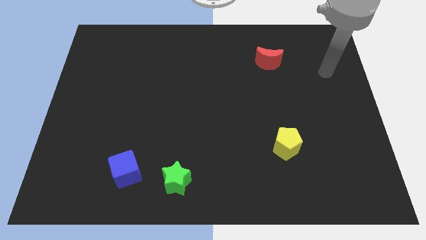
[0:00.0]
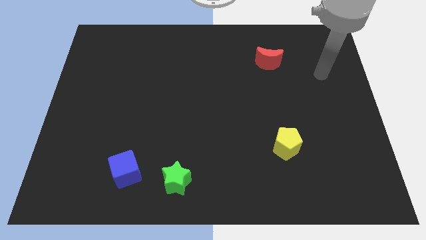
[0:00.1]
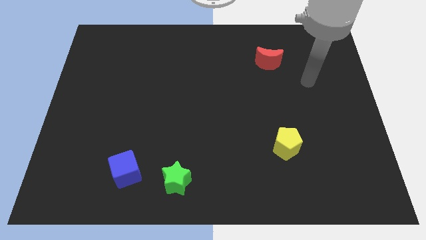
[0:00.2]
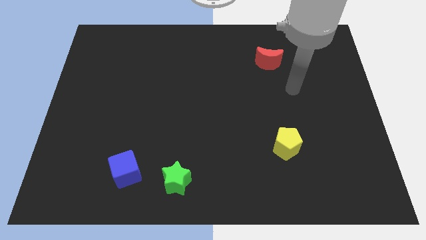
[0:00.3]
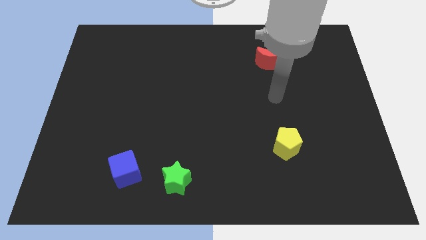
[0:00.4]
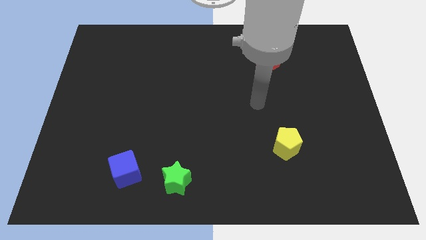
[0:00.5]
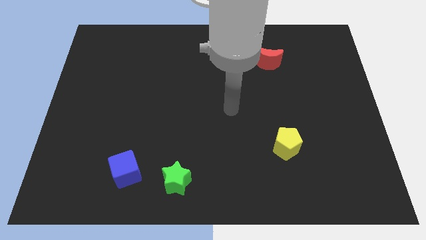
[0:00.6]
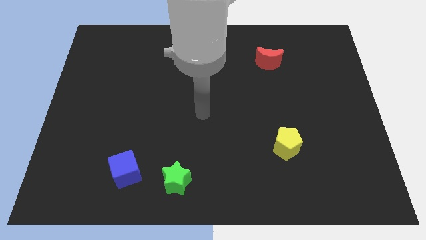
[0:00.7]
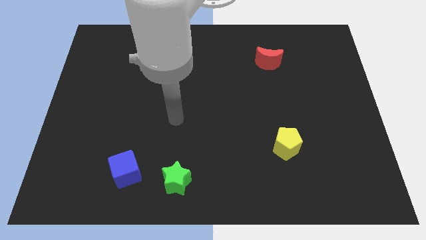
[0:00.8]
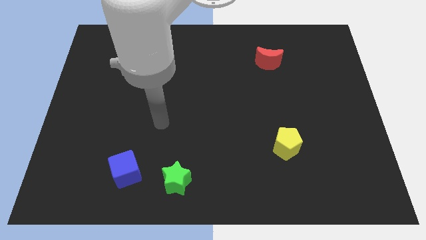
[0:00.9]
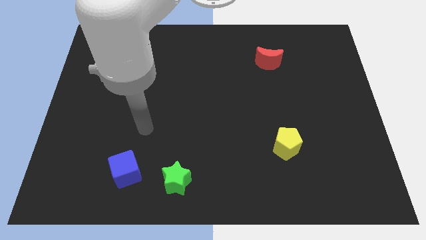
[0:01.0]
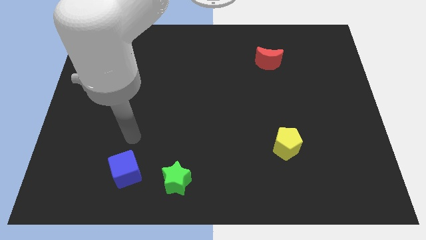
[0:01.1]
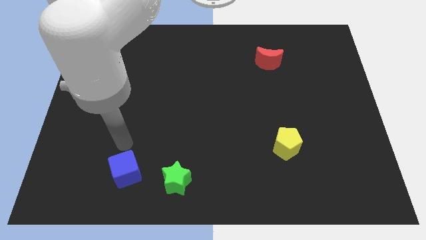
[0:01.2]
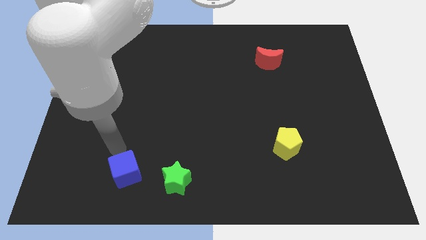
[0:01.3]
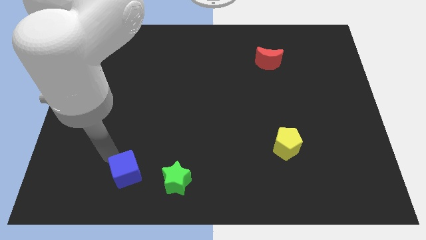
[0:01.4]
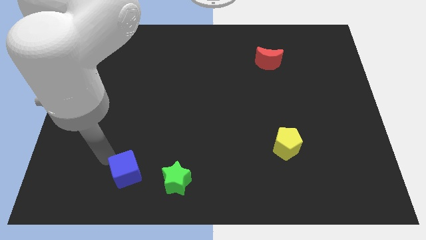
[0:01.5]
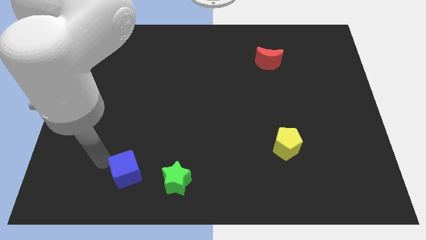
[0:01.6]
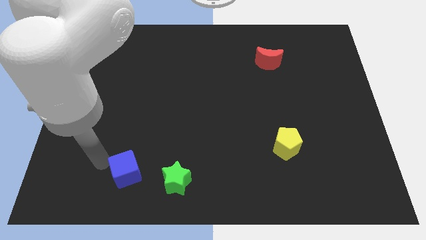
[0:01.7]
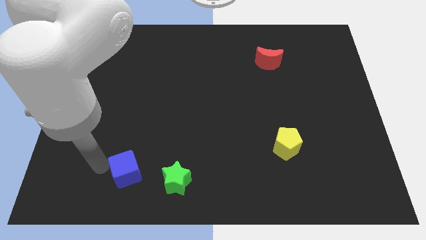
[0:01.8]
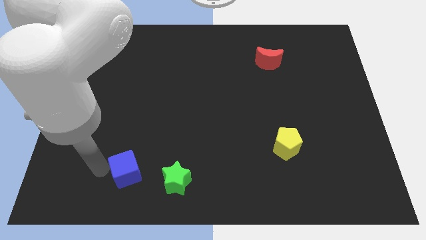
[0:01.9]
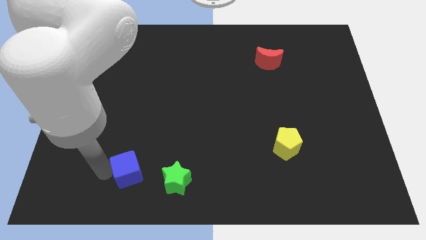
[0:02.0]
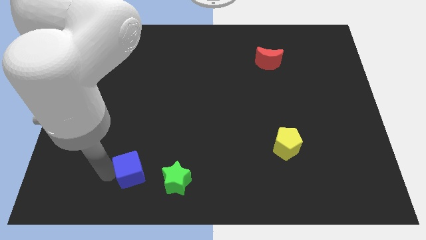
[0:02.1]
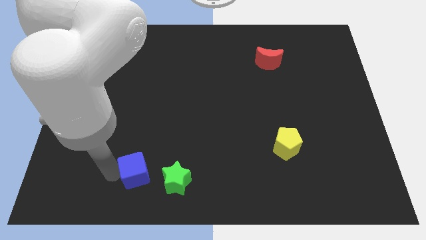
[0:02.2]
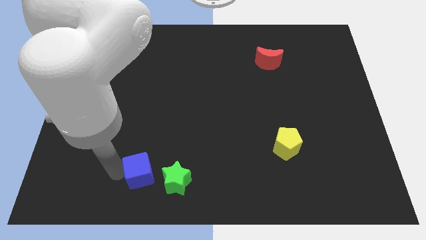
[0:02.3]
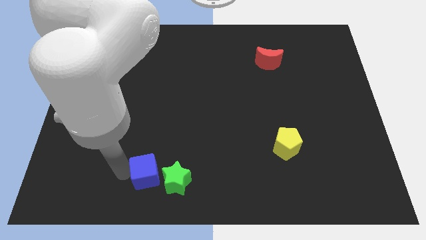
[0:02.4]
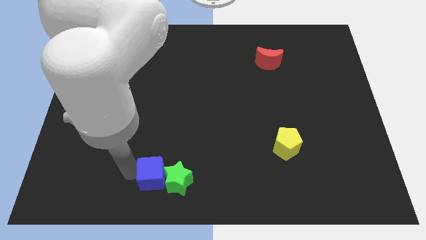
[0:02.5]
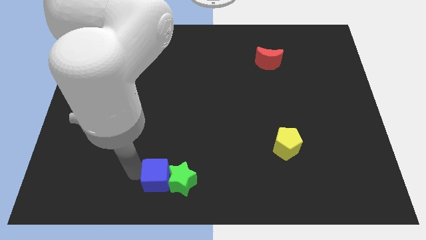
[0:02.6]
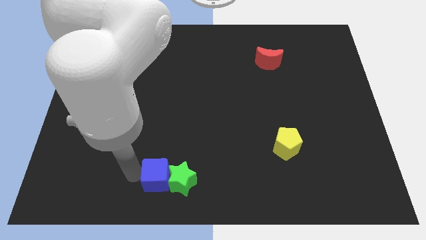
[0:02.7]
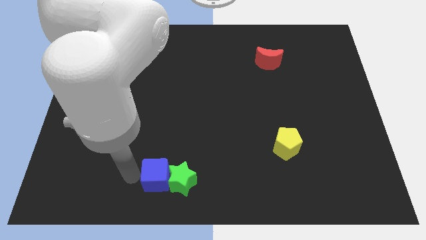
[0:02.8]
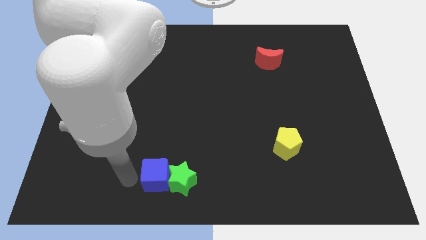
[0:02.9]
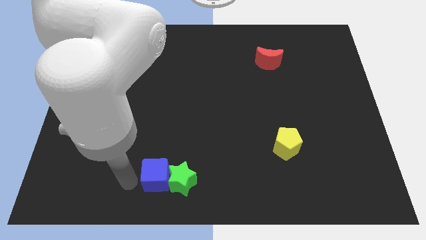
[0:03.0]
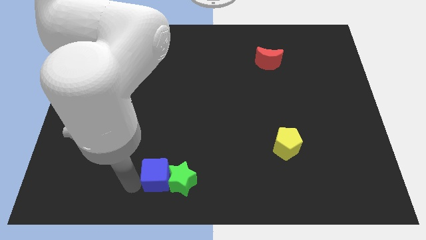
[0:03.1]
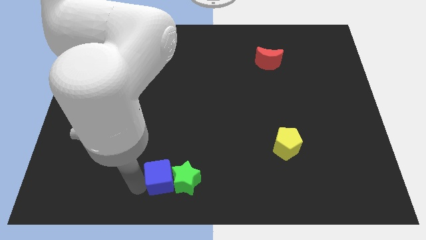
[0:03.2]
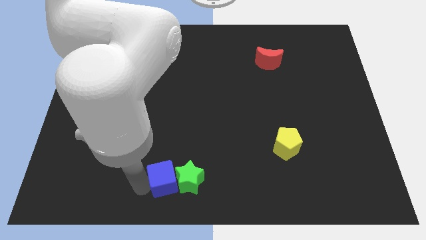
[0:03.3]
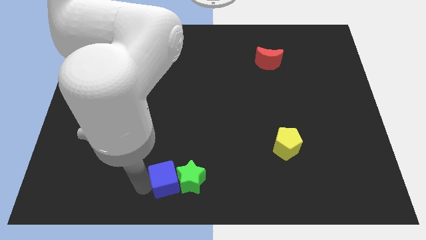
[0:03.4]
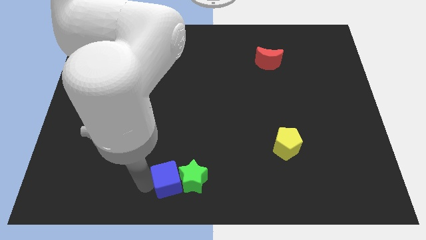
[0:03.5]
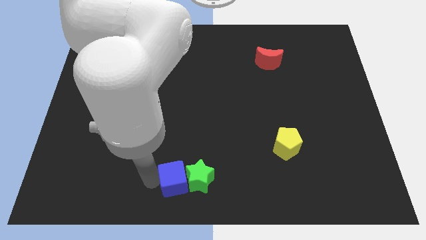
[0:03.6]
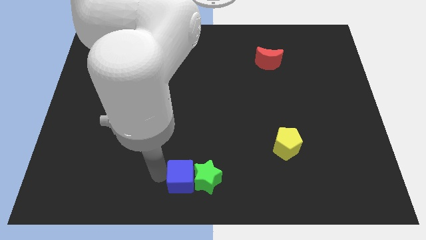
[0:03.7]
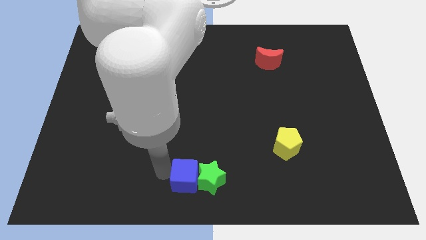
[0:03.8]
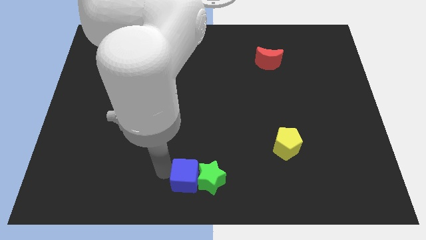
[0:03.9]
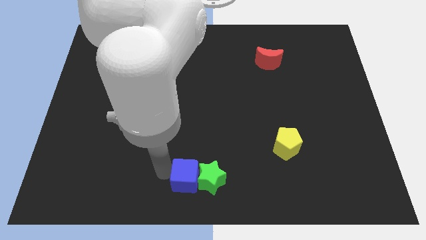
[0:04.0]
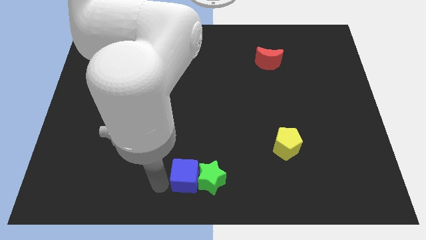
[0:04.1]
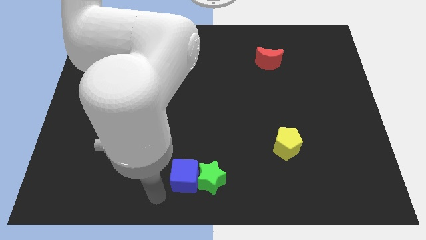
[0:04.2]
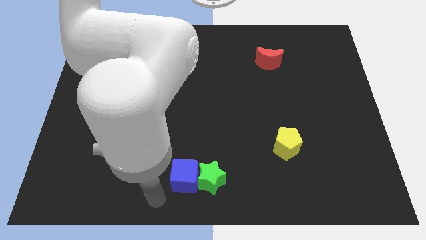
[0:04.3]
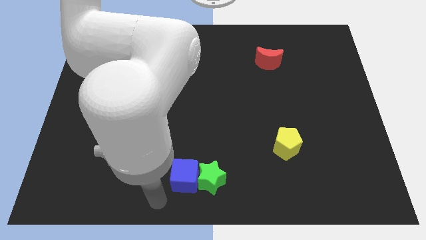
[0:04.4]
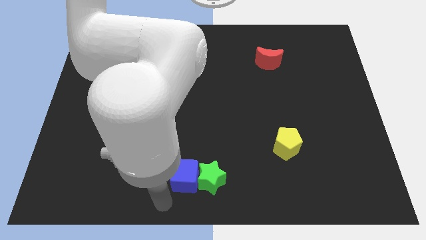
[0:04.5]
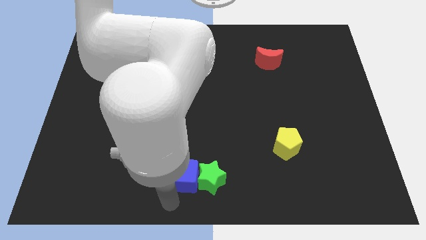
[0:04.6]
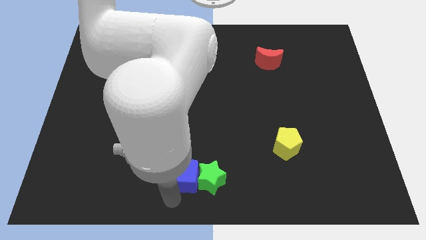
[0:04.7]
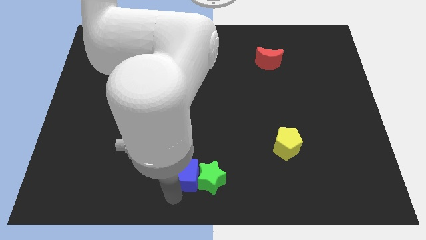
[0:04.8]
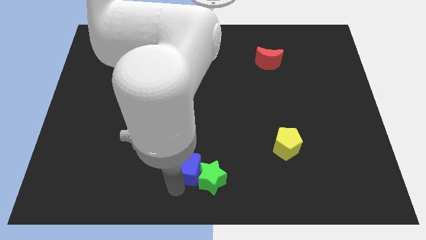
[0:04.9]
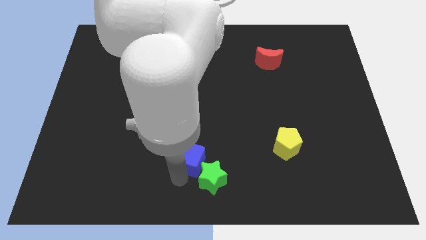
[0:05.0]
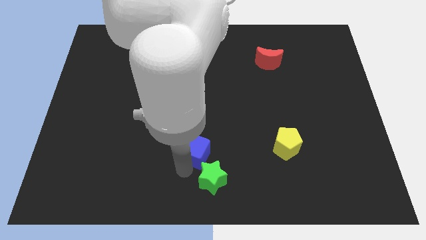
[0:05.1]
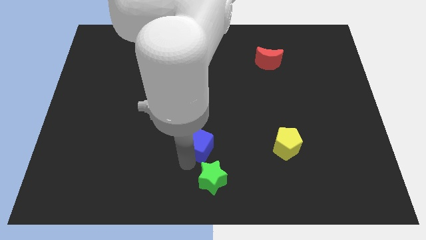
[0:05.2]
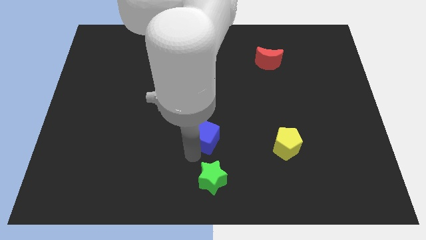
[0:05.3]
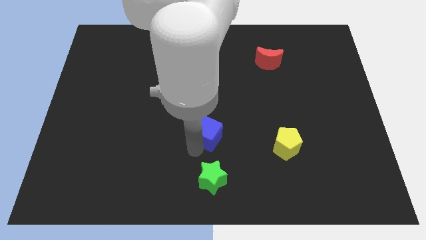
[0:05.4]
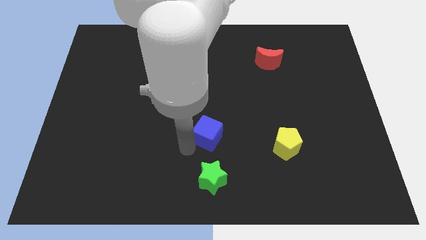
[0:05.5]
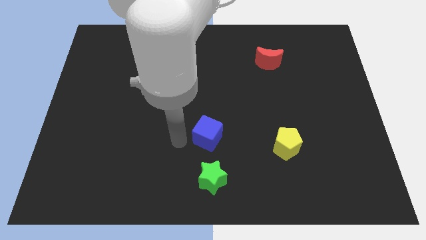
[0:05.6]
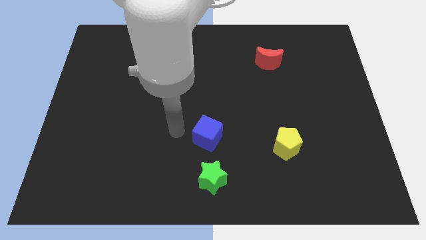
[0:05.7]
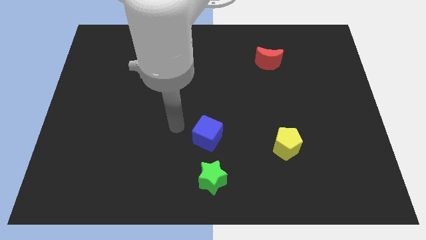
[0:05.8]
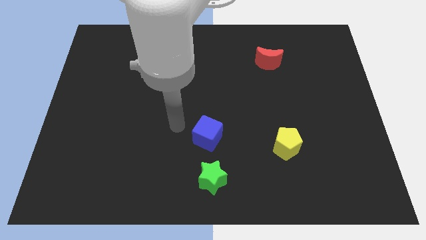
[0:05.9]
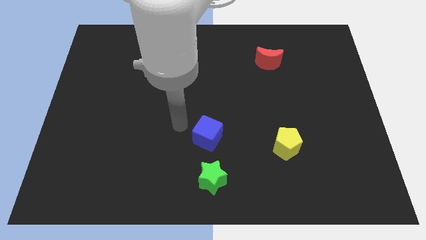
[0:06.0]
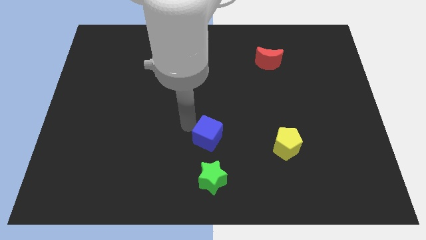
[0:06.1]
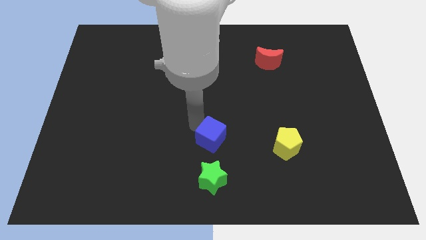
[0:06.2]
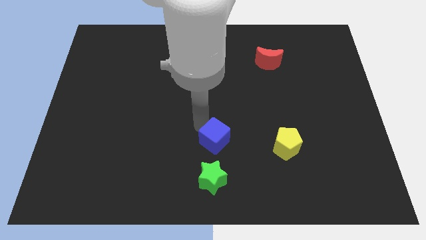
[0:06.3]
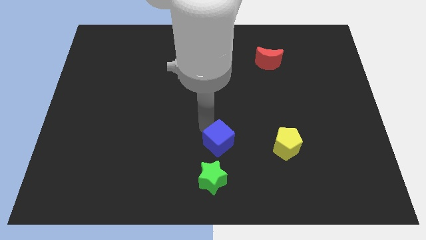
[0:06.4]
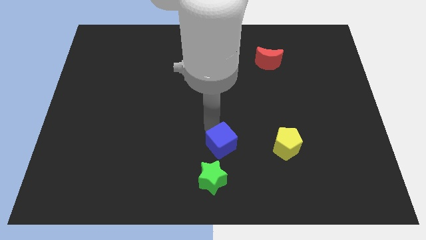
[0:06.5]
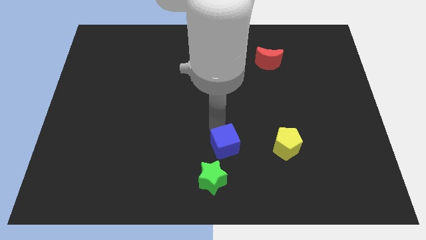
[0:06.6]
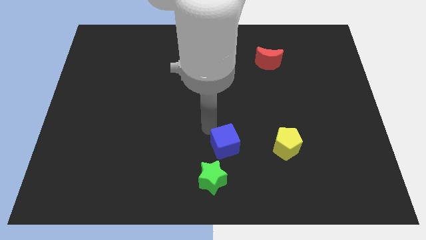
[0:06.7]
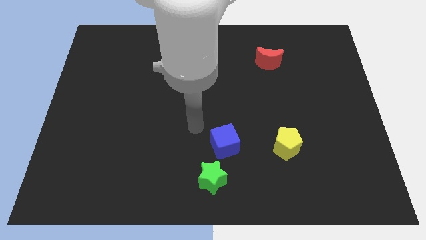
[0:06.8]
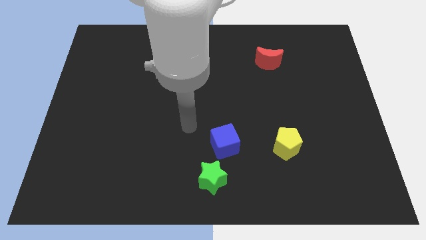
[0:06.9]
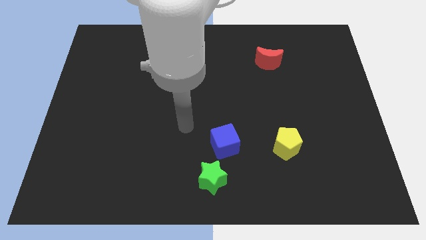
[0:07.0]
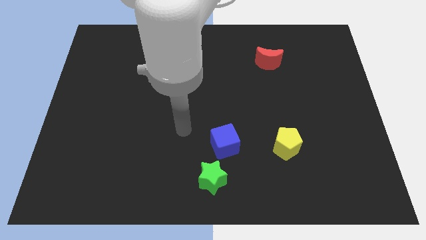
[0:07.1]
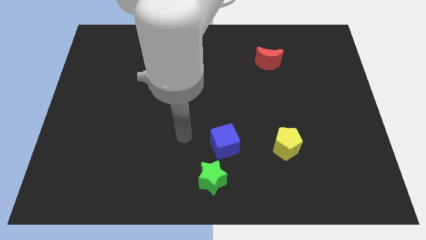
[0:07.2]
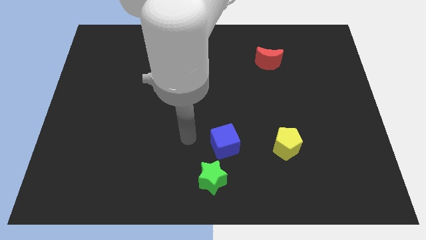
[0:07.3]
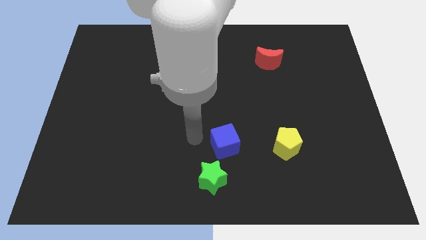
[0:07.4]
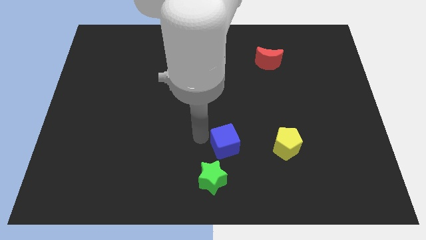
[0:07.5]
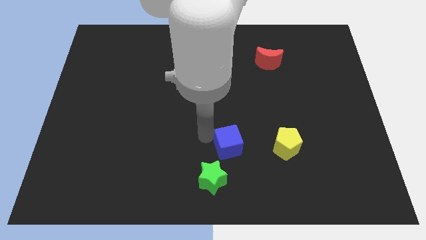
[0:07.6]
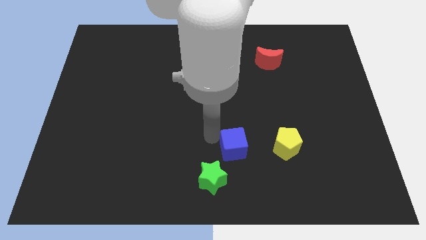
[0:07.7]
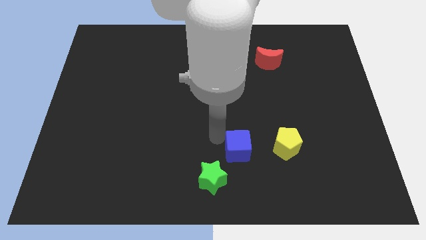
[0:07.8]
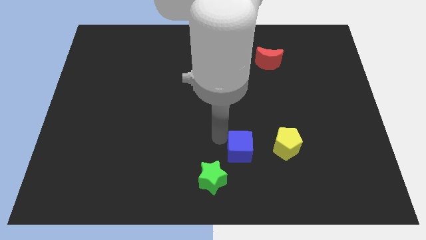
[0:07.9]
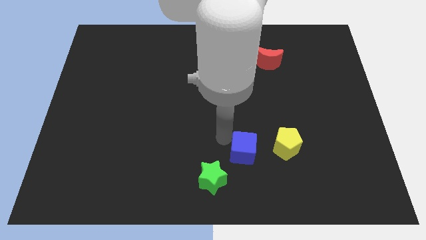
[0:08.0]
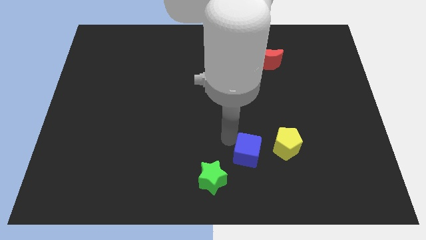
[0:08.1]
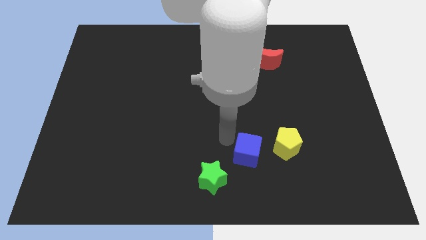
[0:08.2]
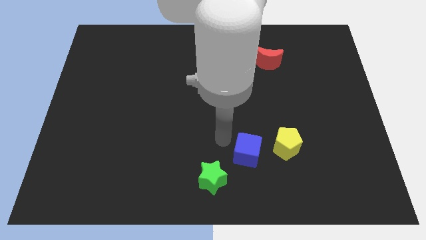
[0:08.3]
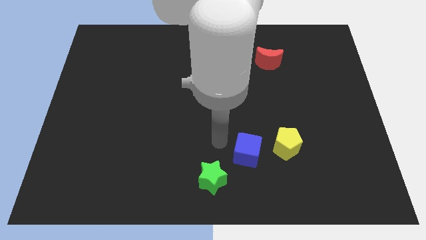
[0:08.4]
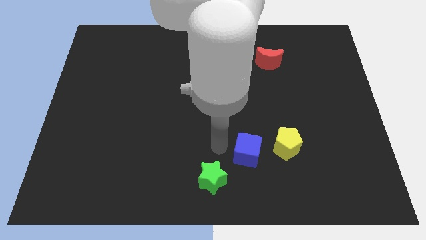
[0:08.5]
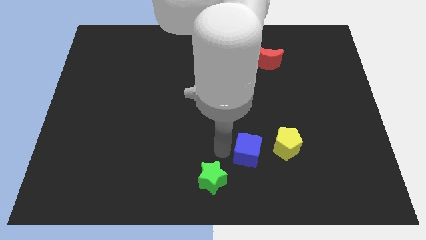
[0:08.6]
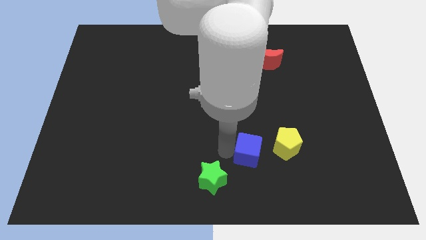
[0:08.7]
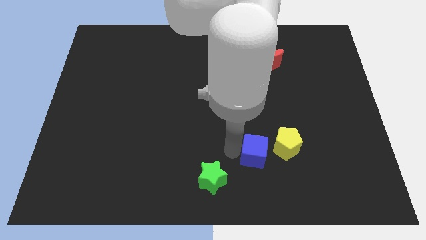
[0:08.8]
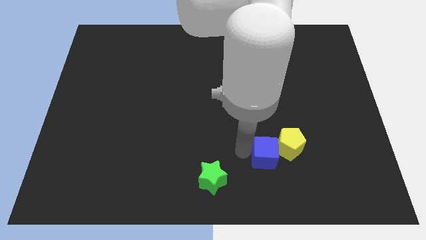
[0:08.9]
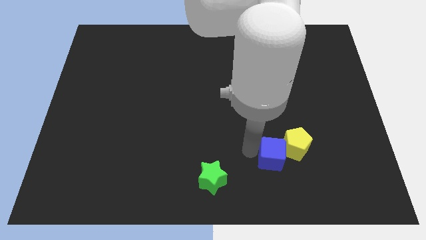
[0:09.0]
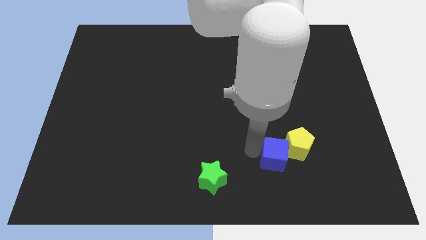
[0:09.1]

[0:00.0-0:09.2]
move the cube close to the pentagon
